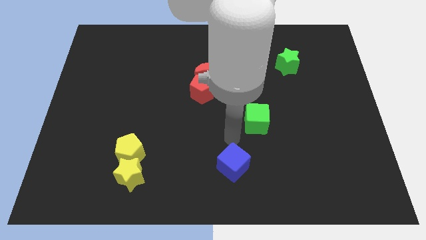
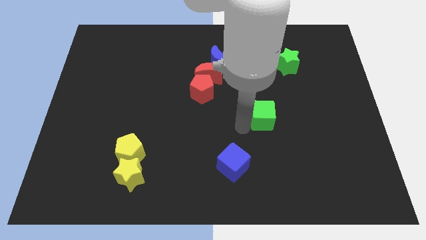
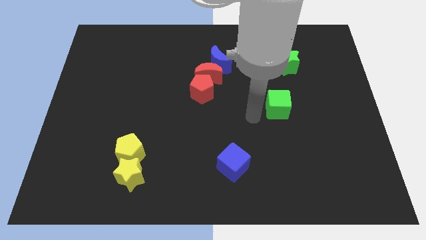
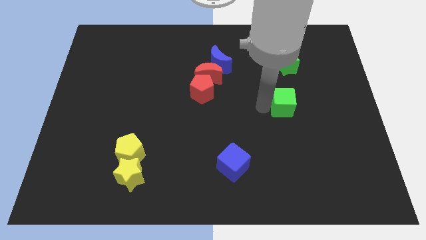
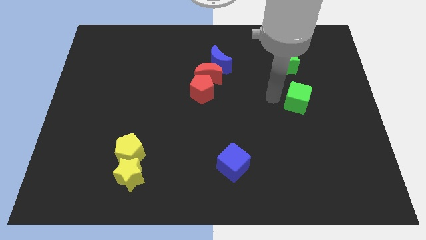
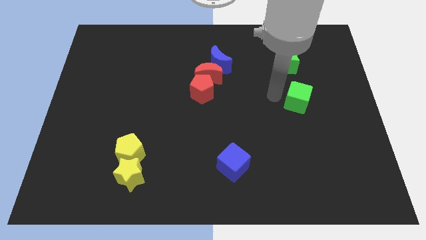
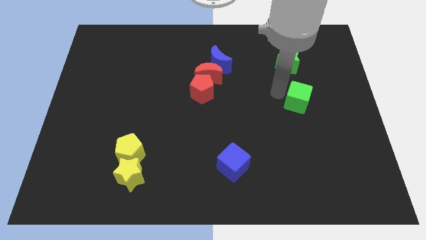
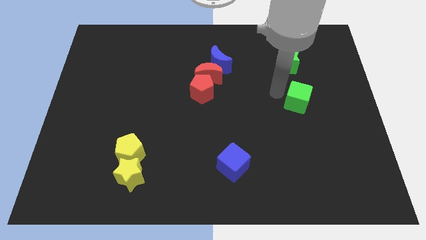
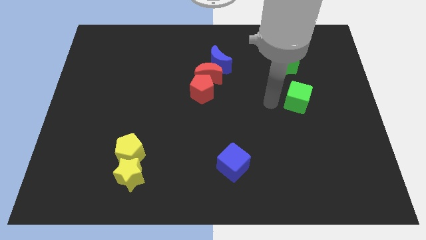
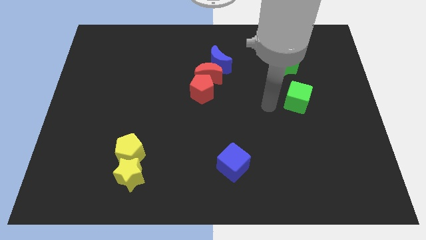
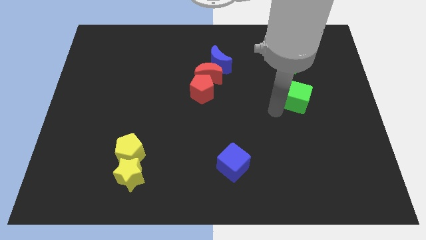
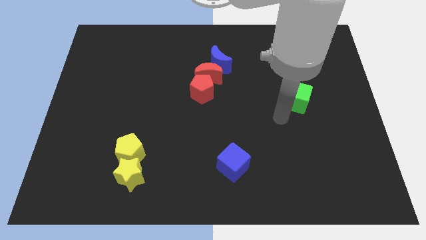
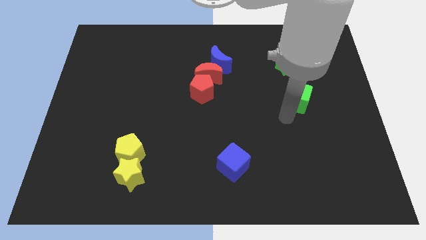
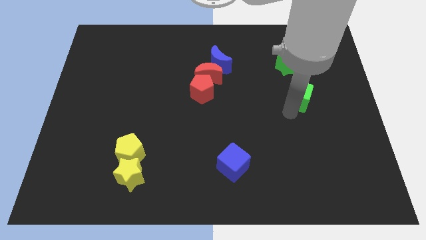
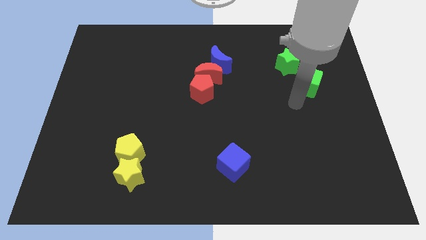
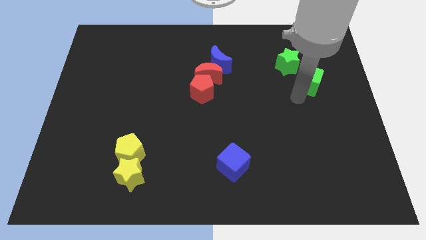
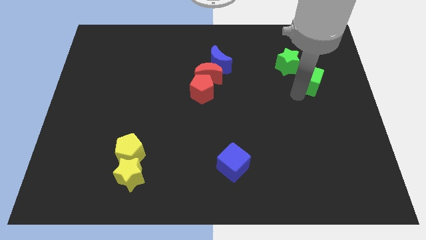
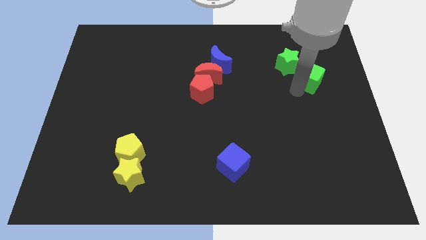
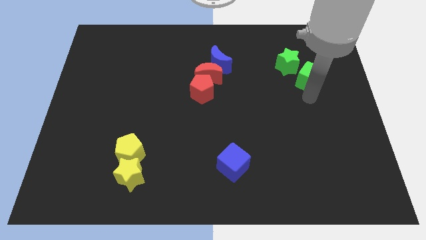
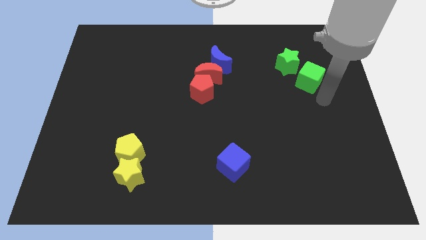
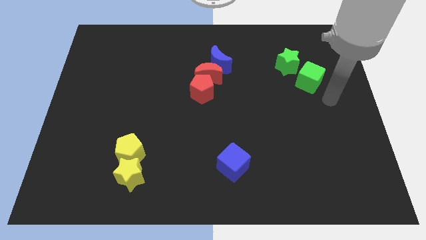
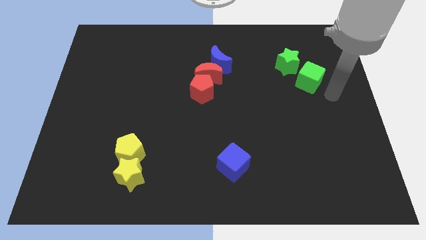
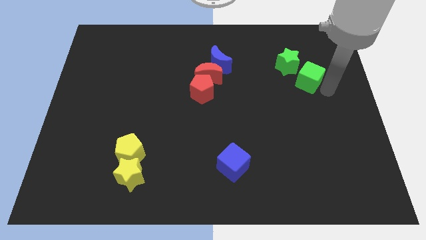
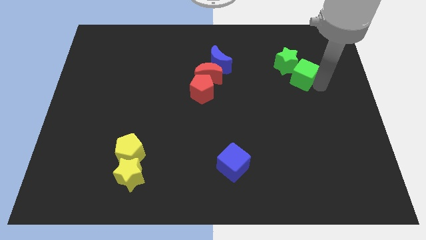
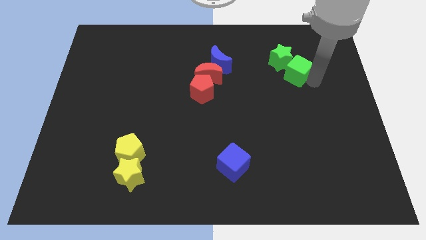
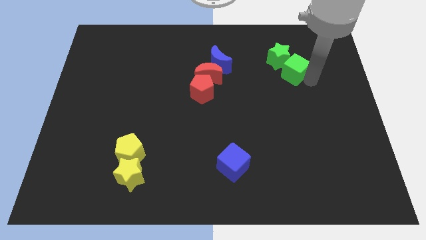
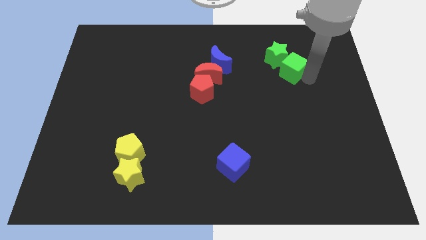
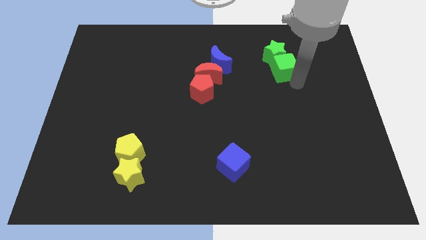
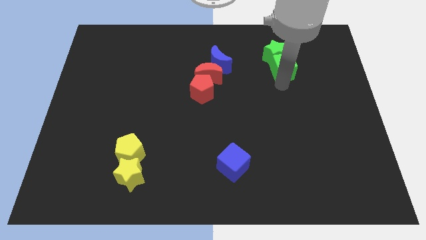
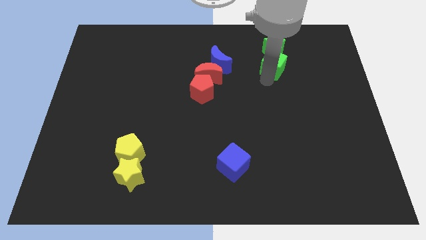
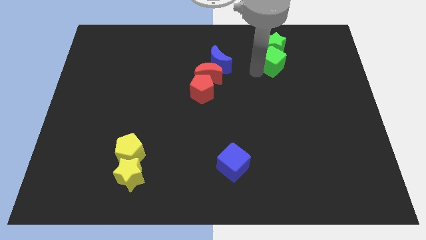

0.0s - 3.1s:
place the green cube below the green star

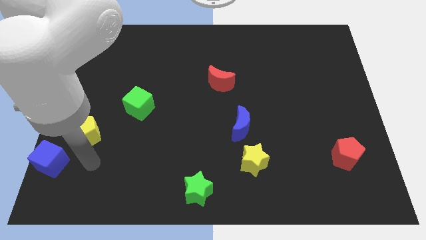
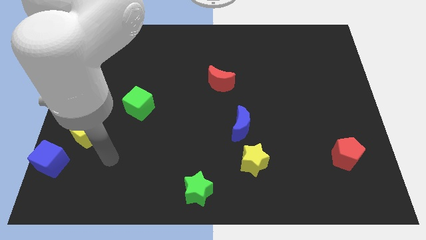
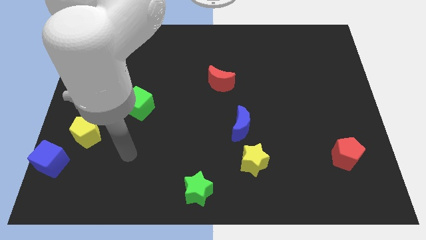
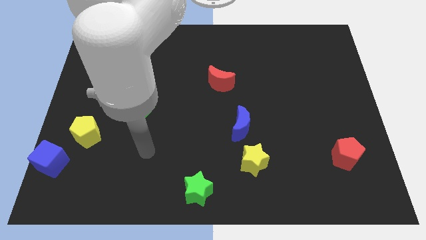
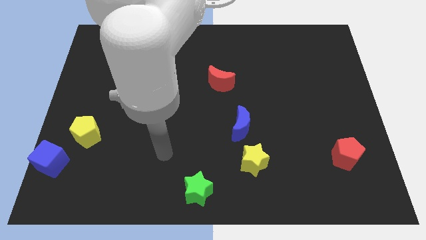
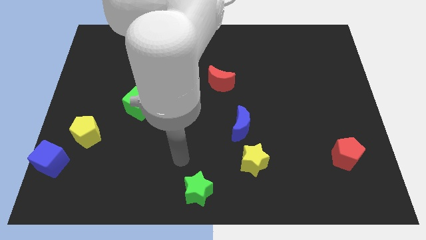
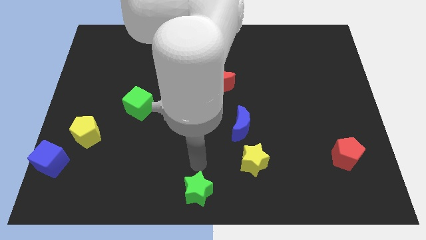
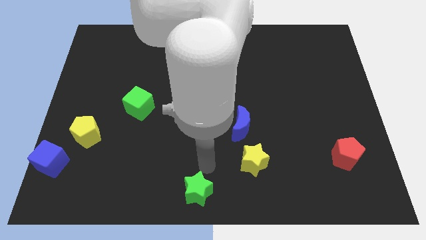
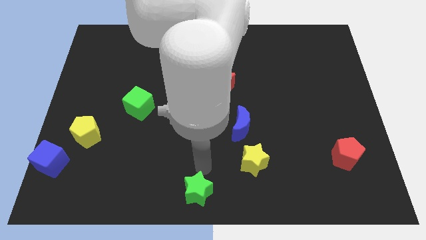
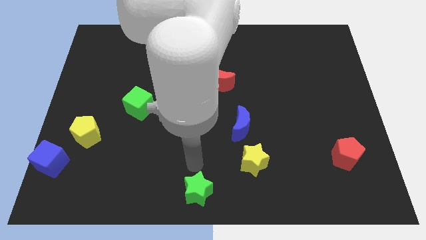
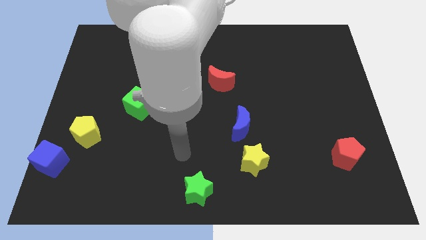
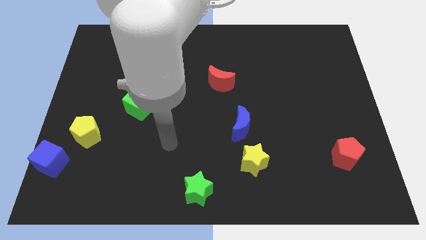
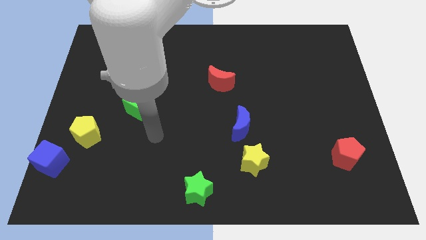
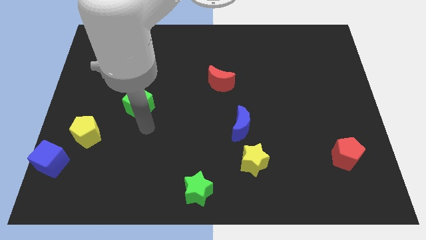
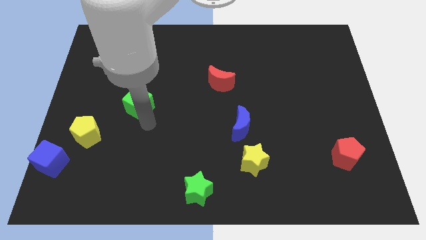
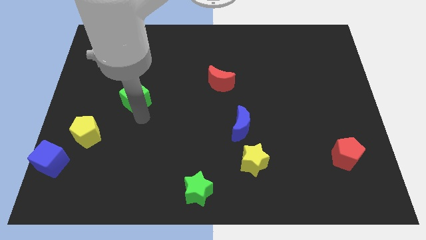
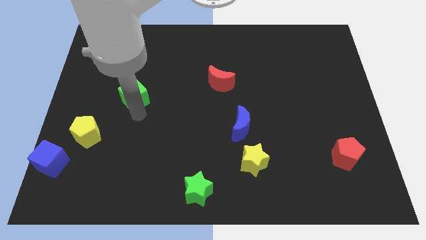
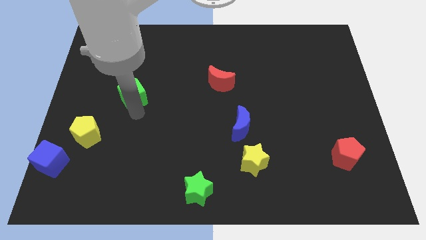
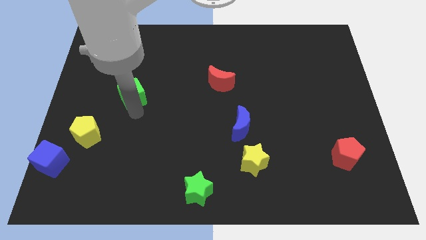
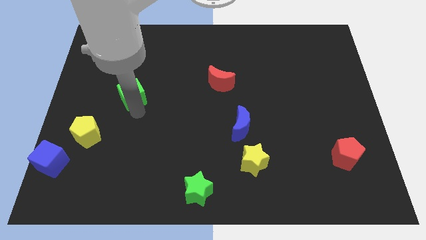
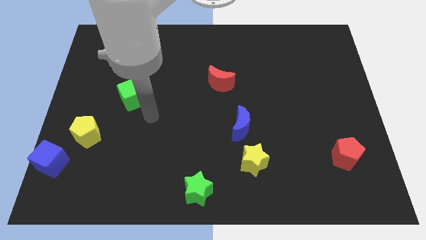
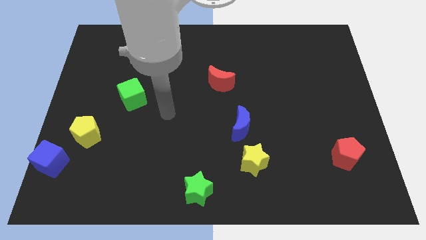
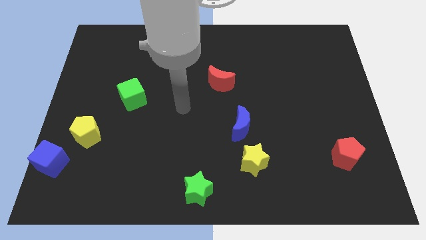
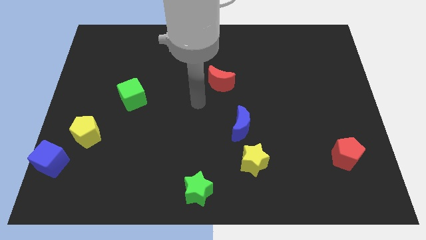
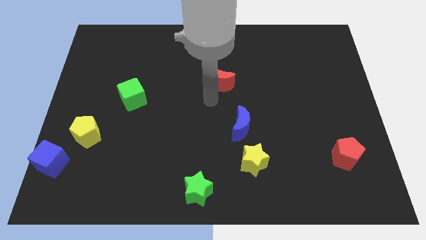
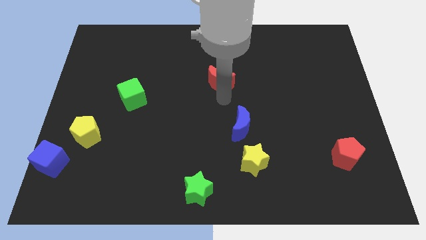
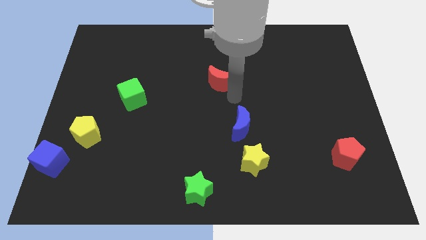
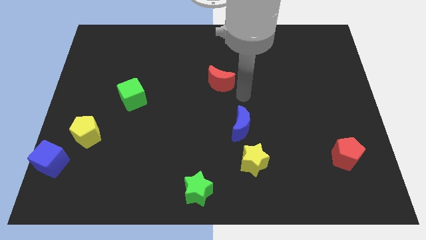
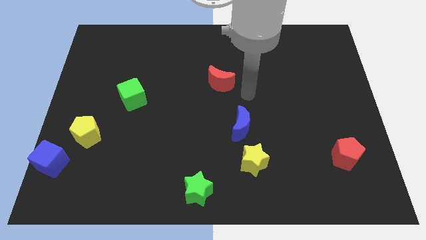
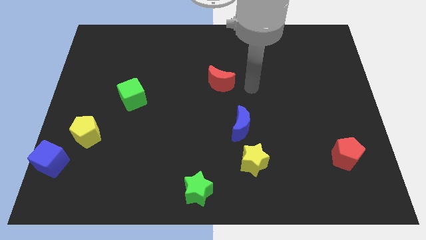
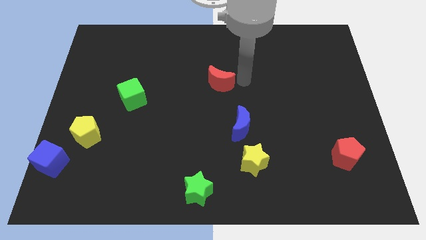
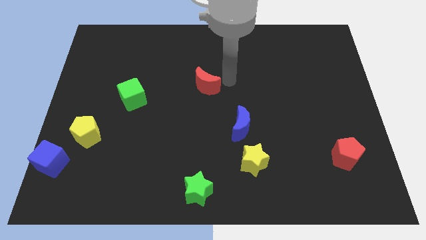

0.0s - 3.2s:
move the green cube to the top left of the board

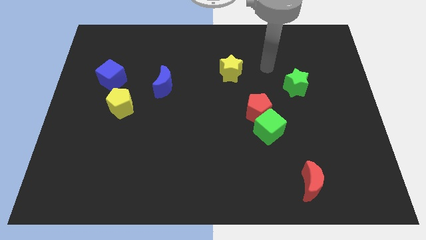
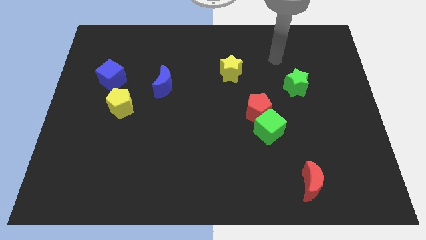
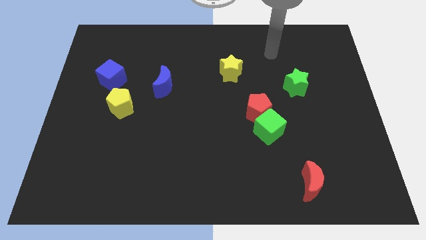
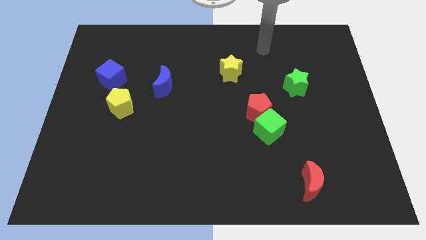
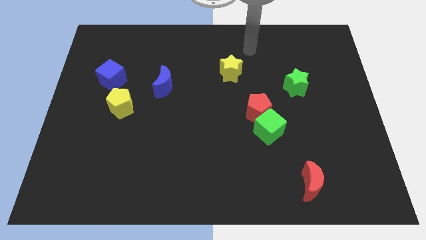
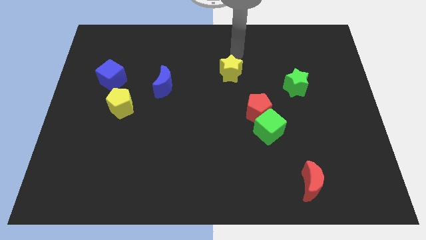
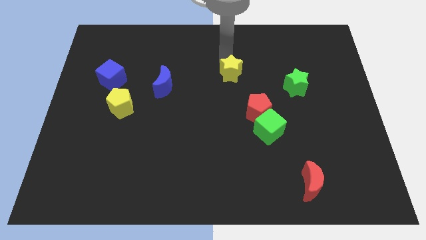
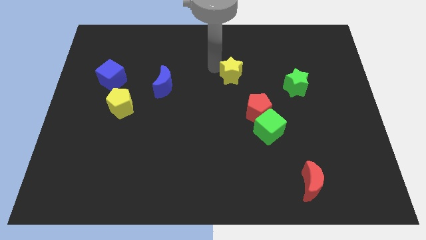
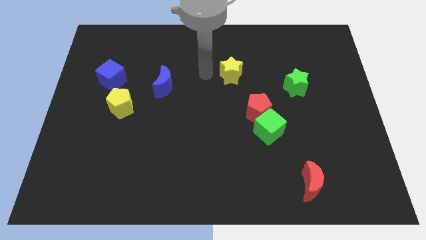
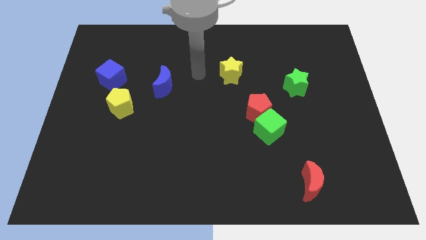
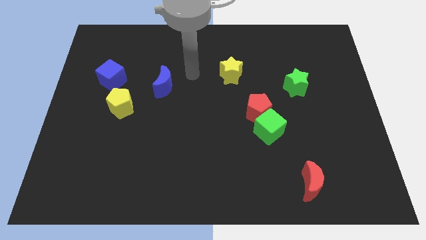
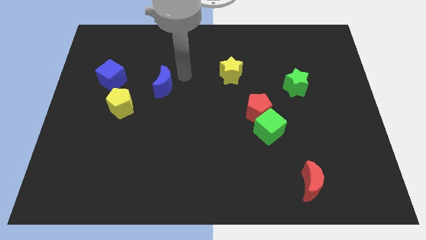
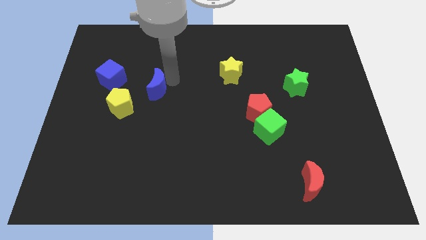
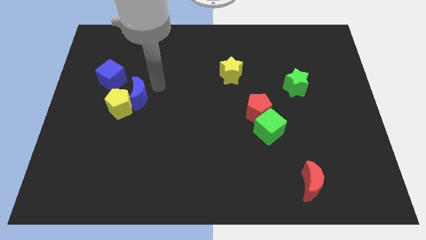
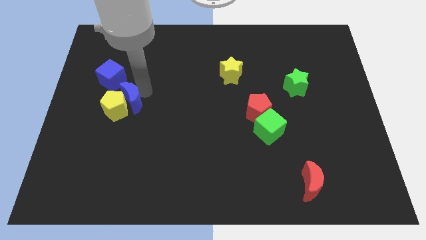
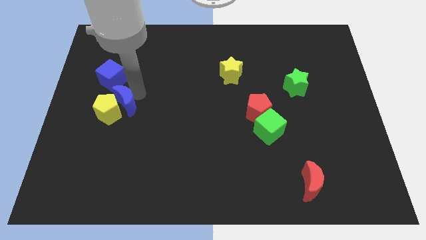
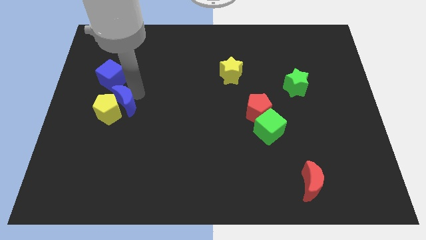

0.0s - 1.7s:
move the yellow pentagon and blue crescent to the bottom side of the blue cube

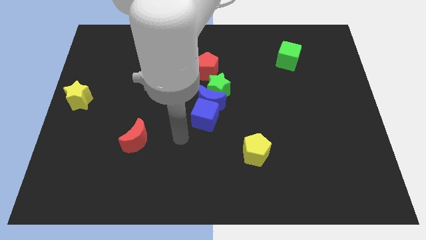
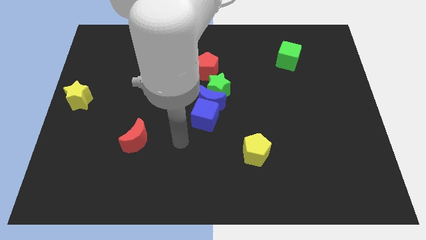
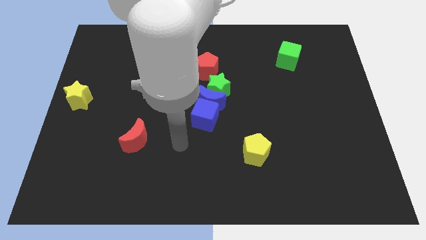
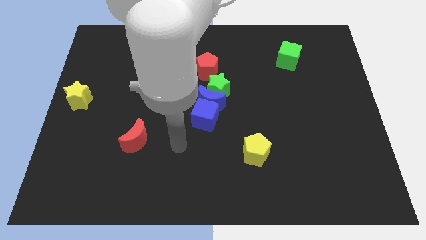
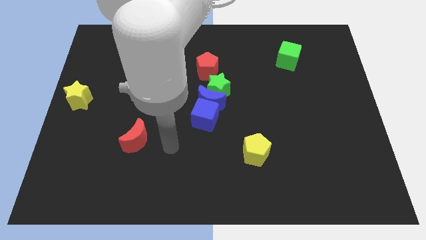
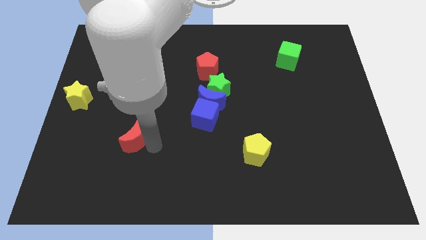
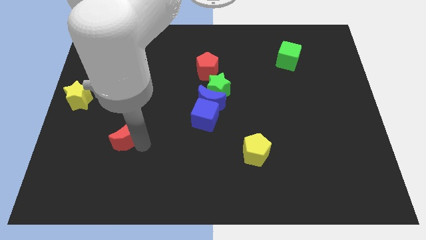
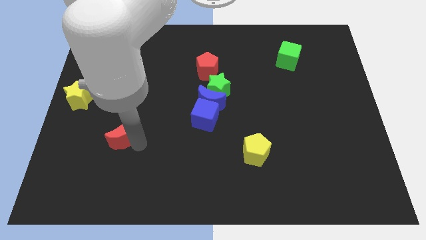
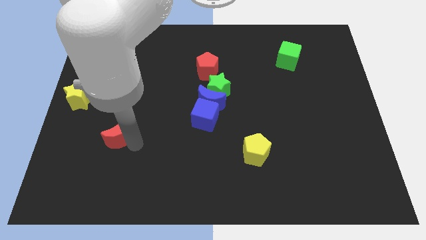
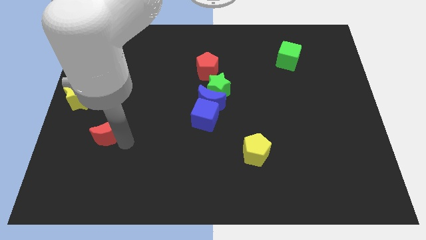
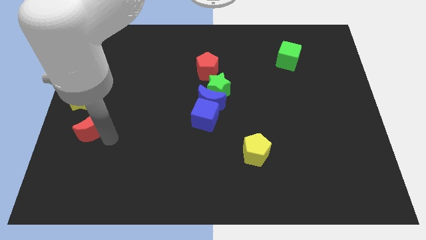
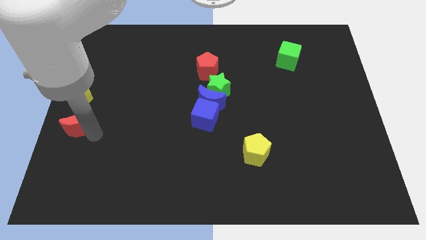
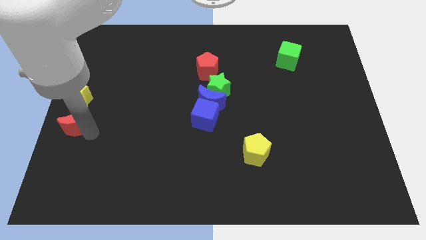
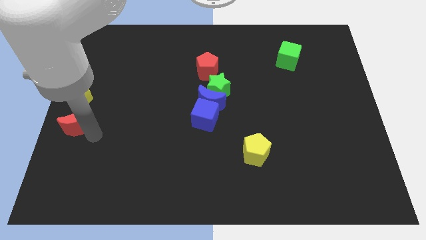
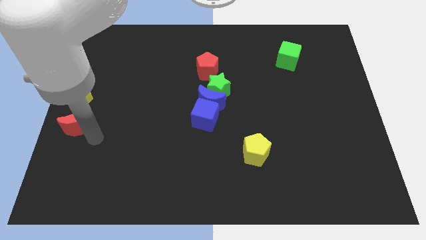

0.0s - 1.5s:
put the red moon below the yellow star
